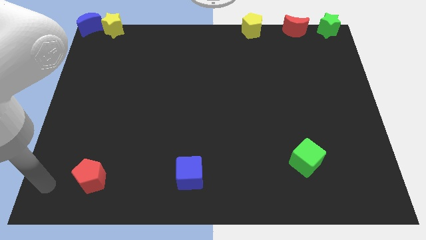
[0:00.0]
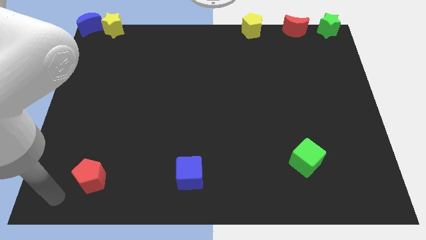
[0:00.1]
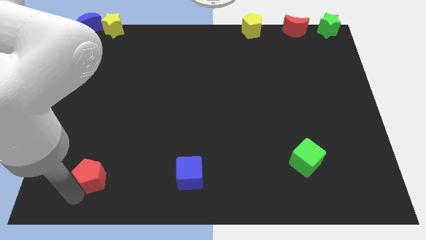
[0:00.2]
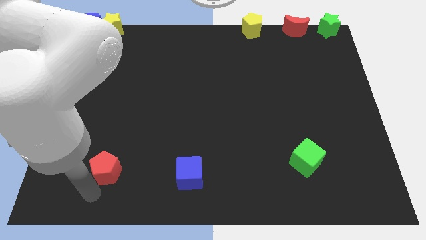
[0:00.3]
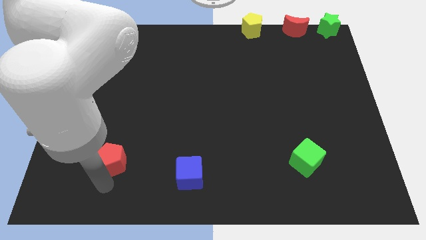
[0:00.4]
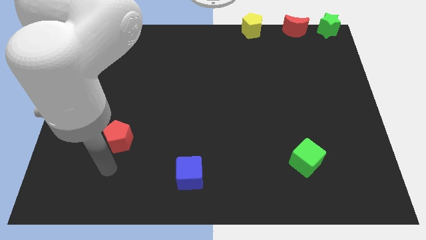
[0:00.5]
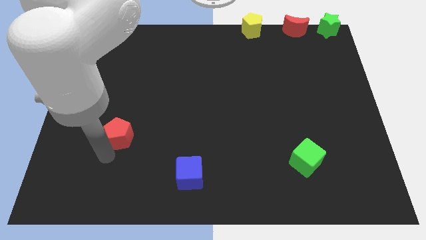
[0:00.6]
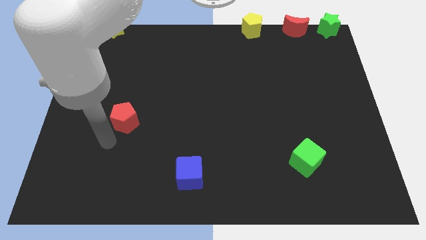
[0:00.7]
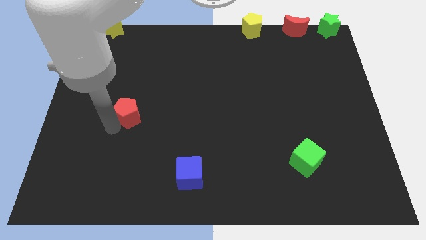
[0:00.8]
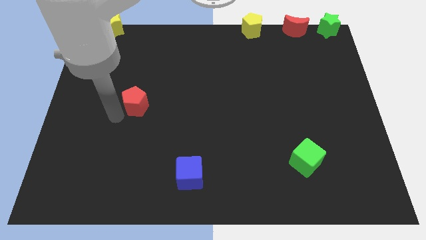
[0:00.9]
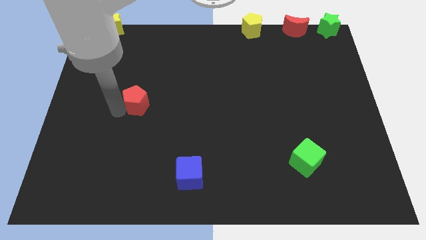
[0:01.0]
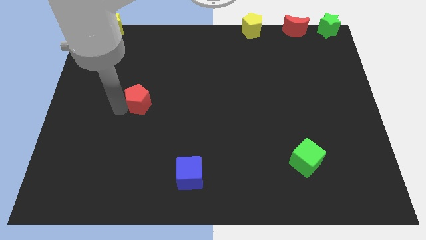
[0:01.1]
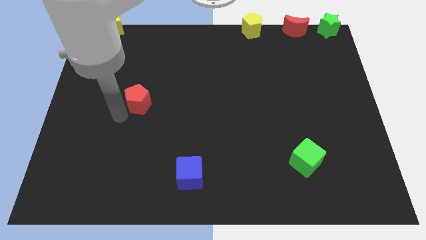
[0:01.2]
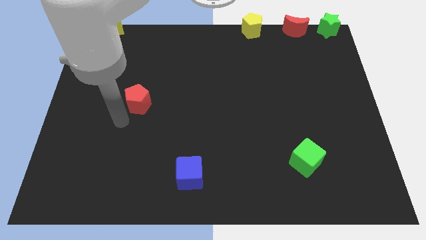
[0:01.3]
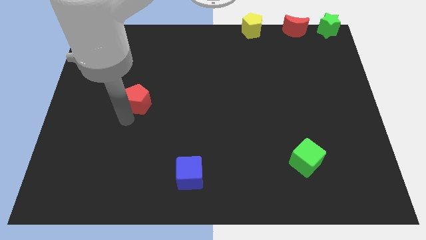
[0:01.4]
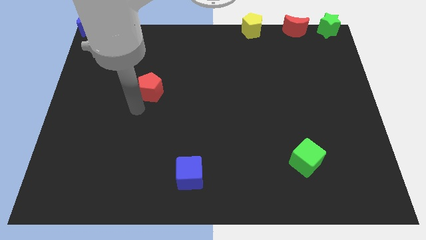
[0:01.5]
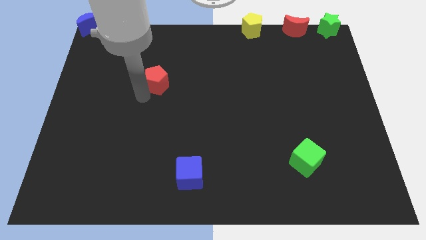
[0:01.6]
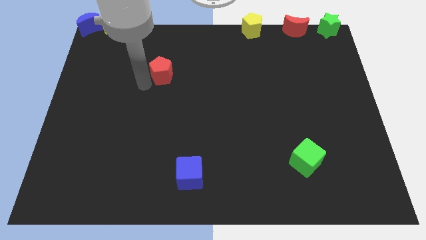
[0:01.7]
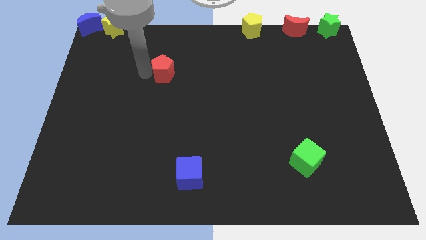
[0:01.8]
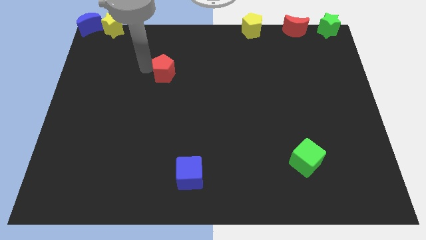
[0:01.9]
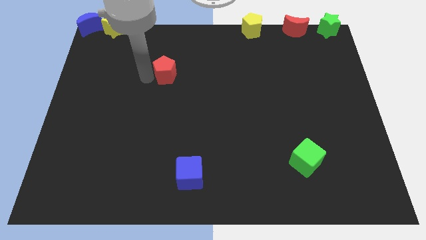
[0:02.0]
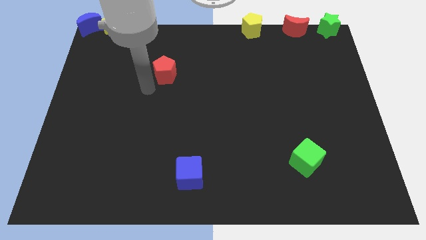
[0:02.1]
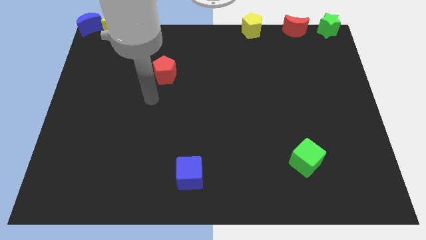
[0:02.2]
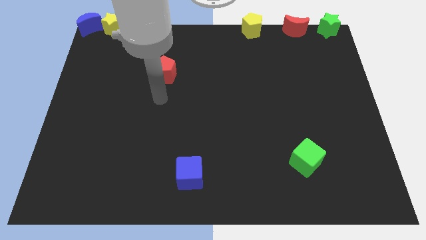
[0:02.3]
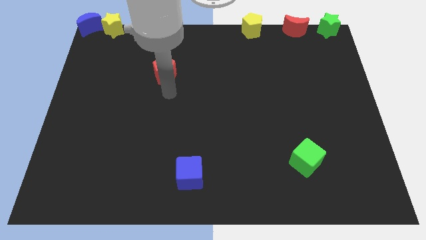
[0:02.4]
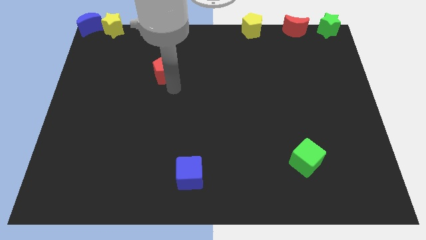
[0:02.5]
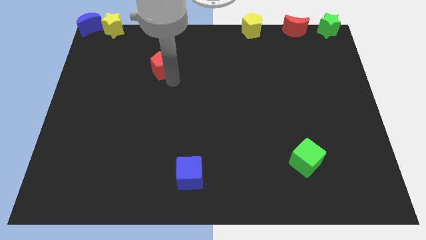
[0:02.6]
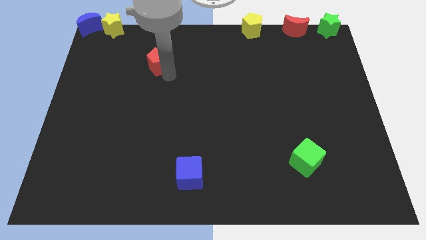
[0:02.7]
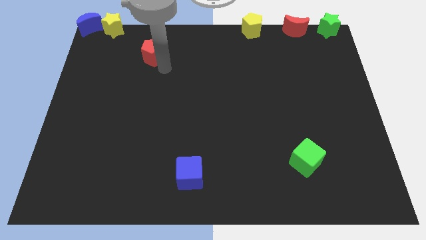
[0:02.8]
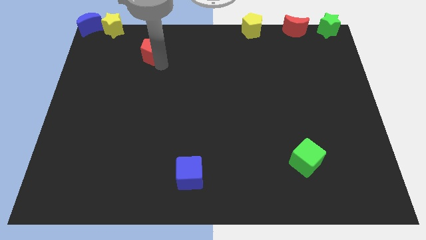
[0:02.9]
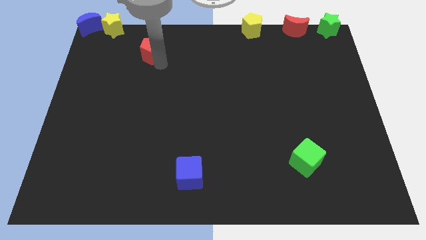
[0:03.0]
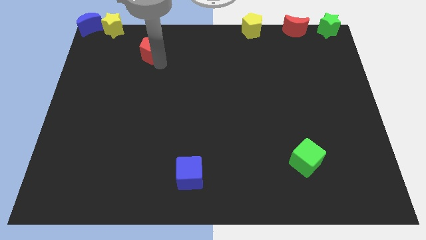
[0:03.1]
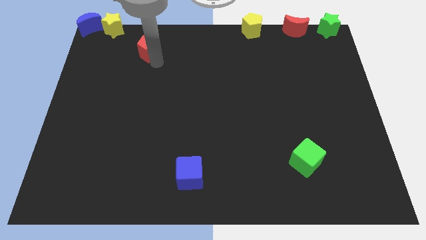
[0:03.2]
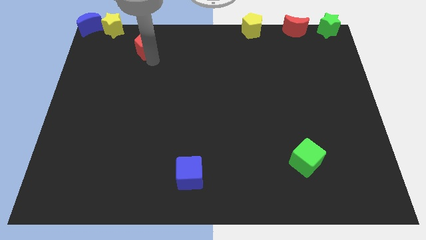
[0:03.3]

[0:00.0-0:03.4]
move the red pentagon to the bottom right side of the yellow star

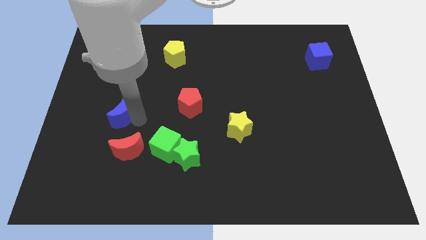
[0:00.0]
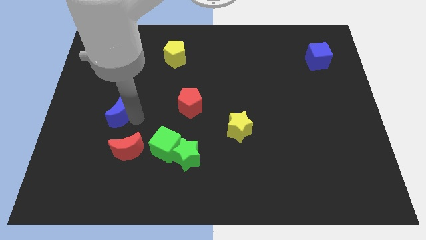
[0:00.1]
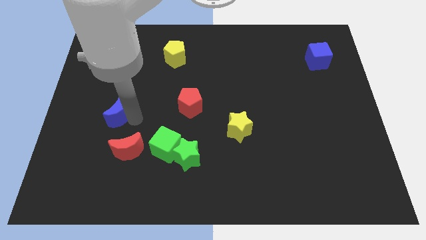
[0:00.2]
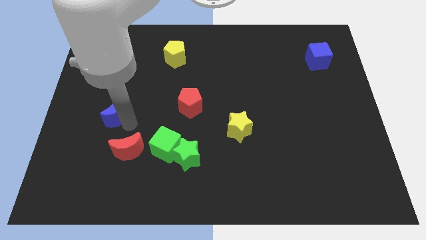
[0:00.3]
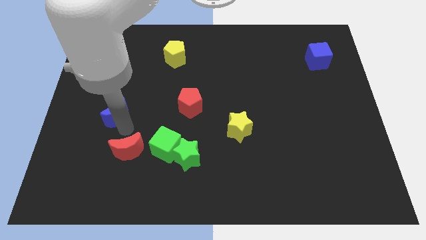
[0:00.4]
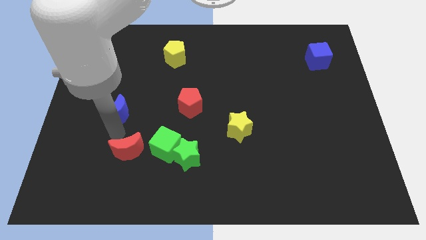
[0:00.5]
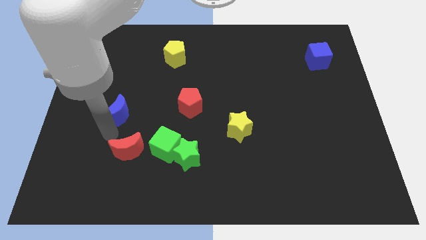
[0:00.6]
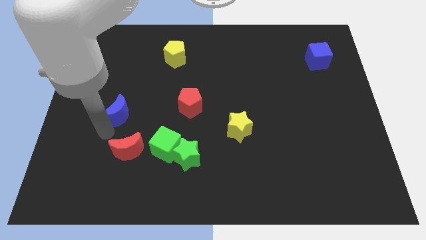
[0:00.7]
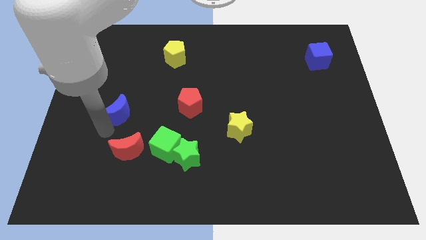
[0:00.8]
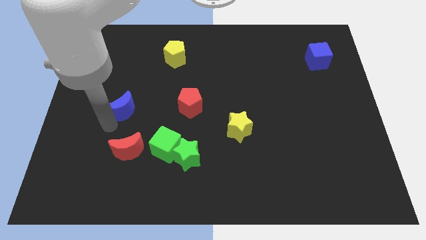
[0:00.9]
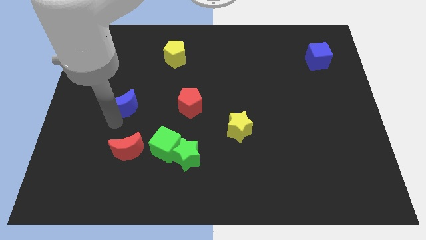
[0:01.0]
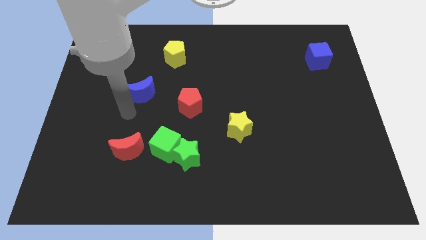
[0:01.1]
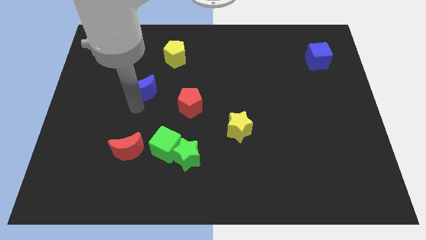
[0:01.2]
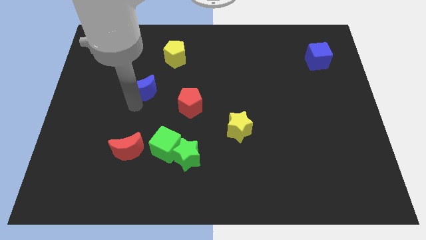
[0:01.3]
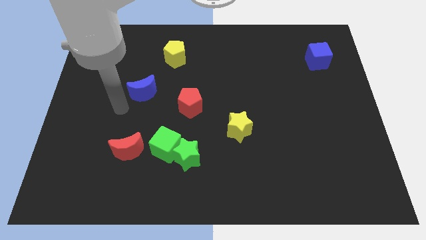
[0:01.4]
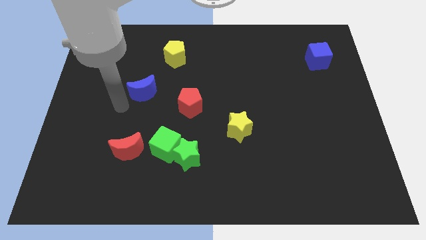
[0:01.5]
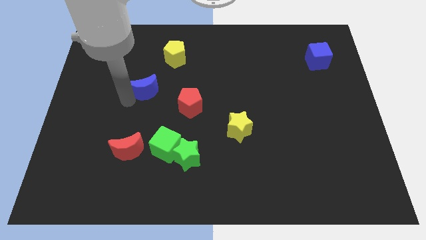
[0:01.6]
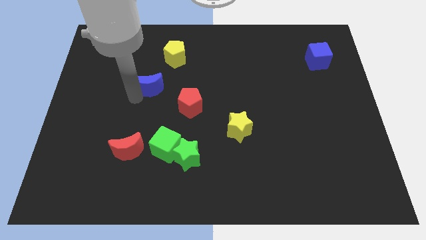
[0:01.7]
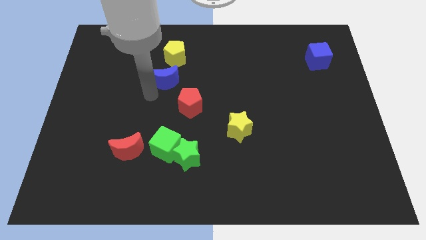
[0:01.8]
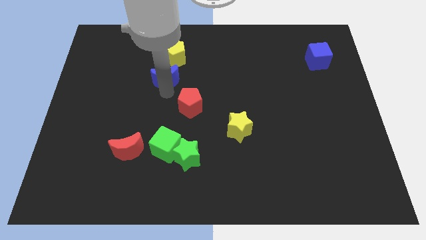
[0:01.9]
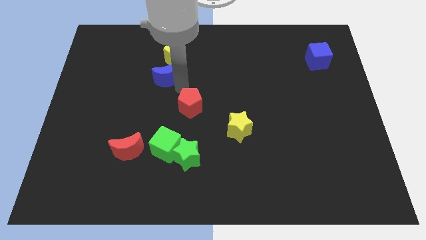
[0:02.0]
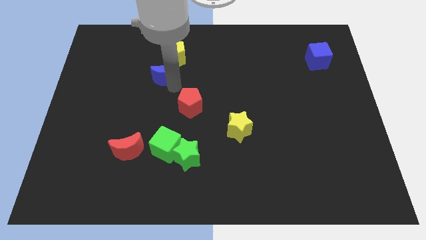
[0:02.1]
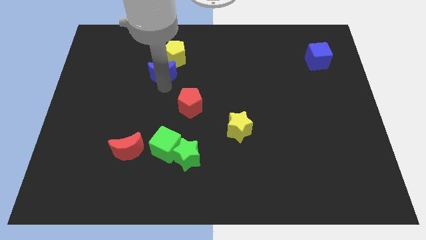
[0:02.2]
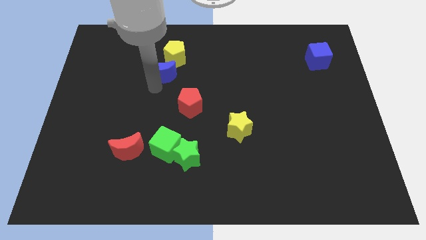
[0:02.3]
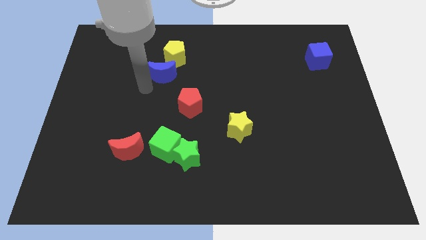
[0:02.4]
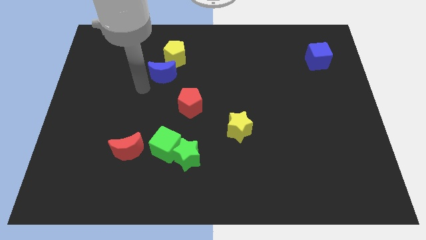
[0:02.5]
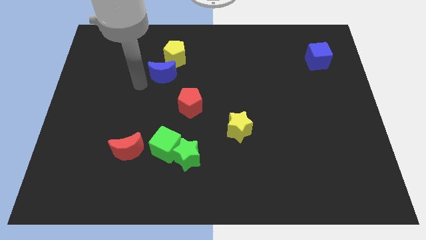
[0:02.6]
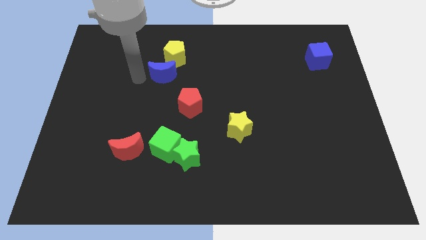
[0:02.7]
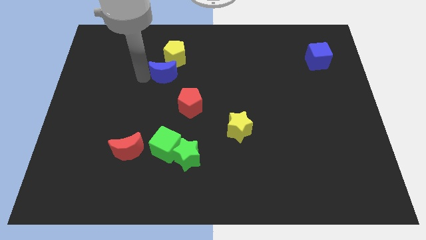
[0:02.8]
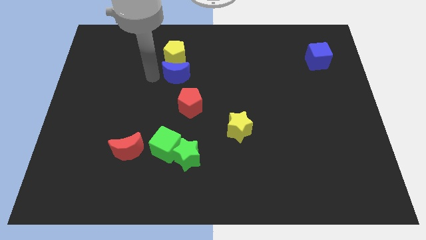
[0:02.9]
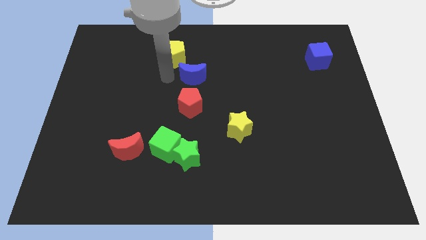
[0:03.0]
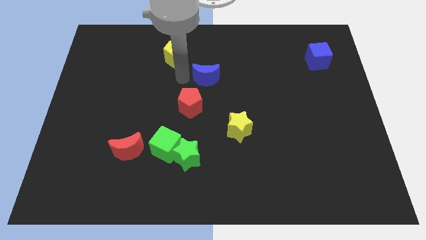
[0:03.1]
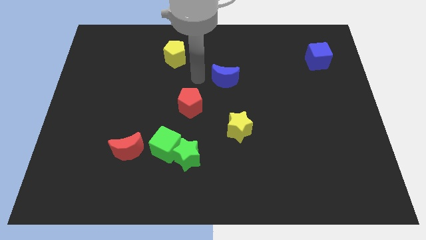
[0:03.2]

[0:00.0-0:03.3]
move blue crescent to the centre of the board

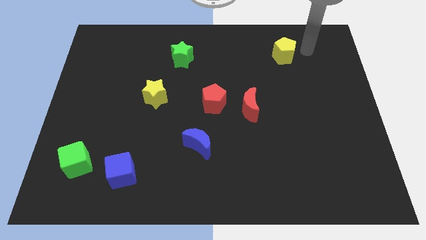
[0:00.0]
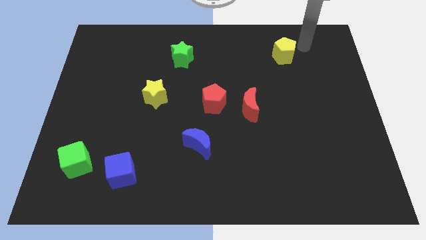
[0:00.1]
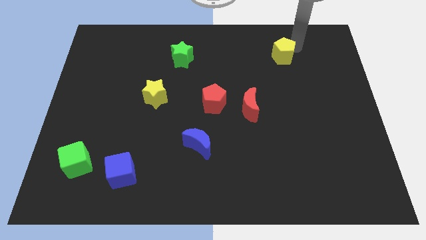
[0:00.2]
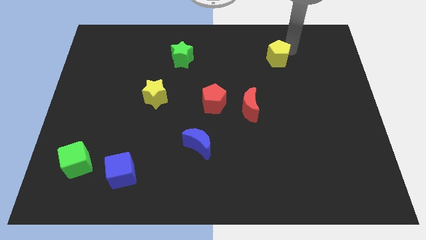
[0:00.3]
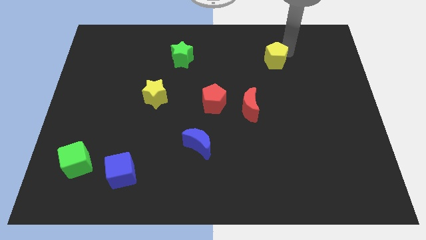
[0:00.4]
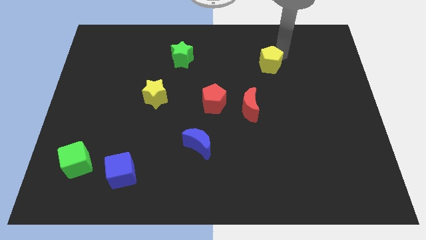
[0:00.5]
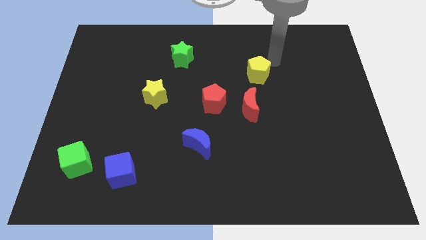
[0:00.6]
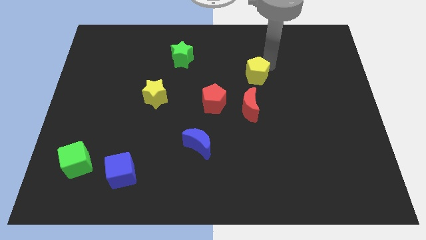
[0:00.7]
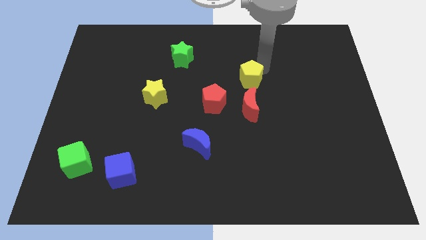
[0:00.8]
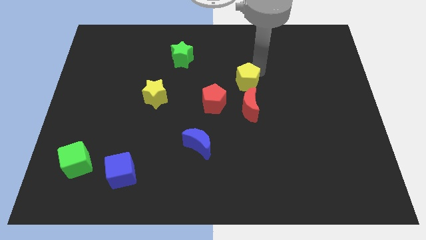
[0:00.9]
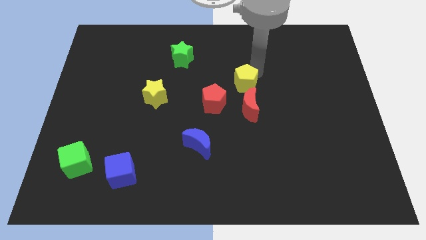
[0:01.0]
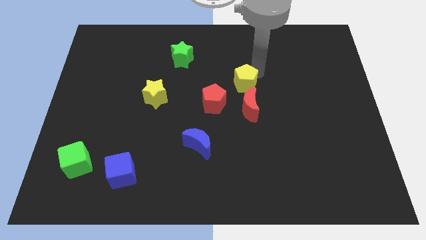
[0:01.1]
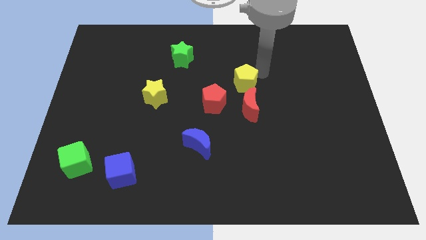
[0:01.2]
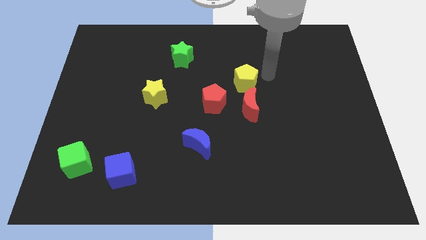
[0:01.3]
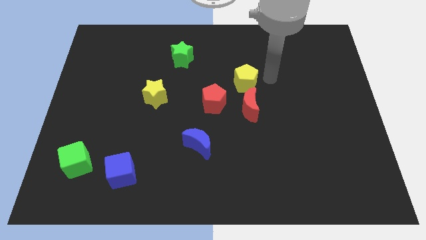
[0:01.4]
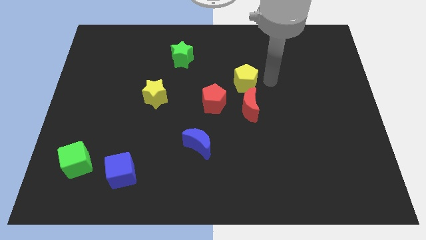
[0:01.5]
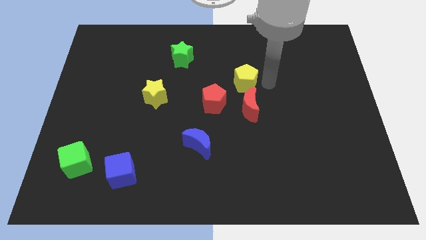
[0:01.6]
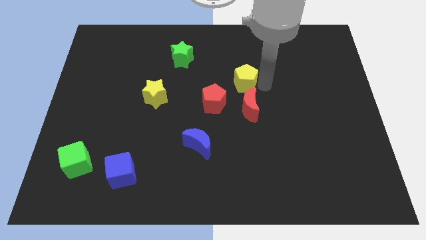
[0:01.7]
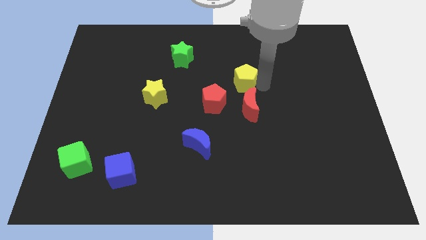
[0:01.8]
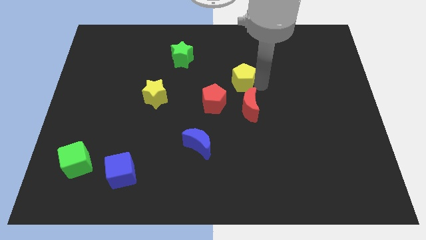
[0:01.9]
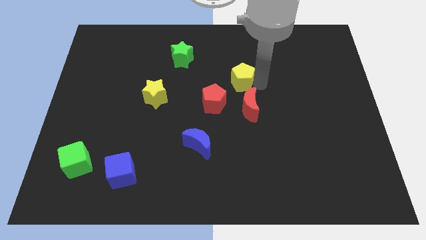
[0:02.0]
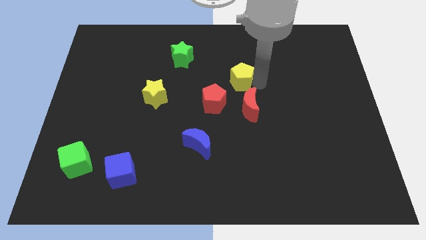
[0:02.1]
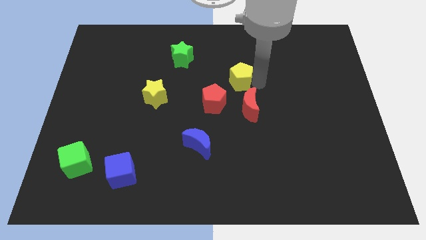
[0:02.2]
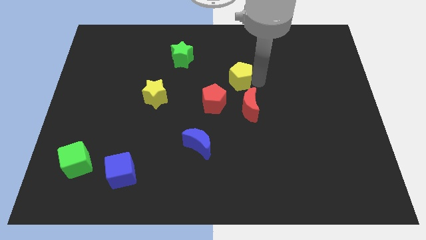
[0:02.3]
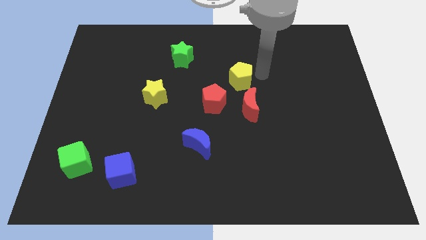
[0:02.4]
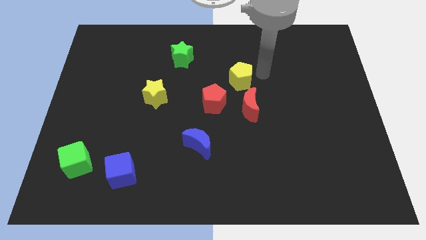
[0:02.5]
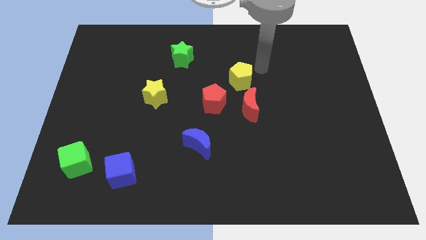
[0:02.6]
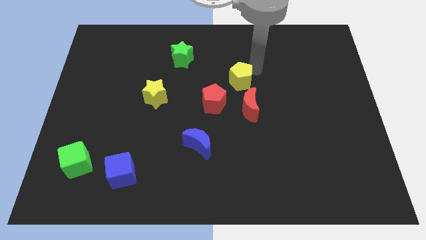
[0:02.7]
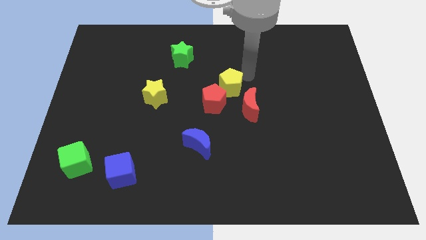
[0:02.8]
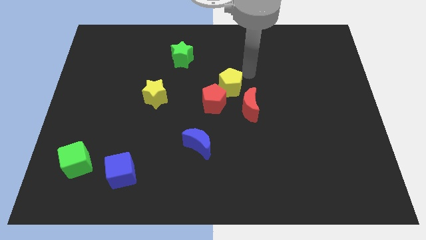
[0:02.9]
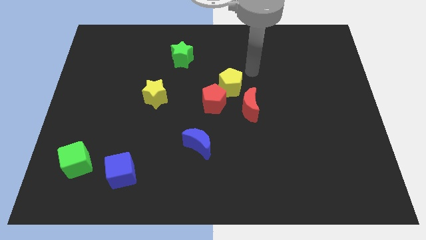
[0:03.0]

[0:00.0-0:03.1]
push the yellow pentagon to the top right of the red pentagon
